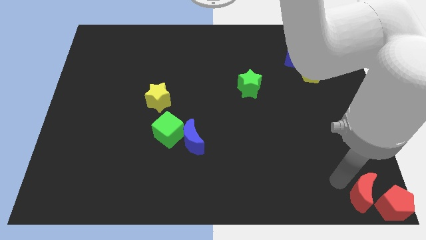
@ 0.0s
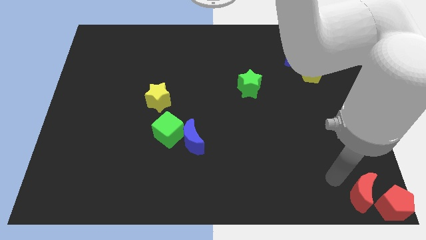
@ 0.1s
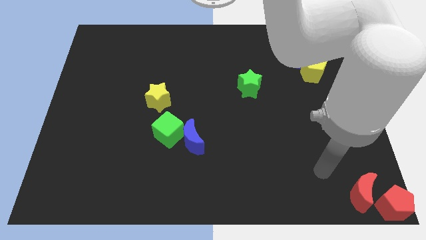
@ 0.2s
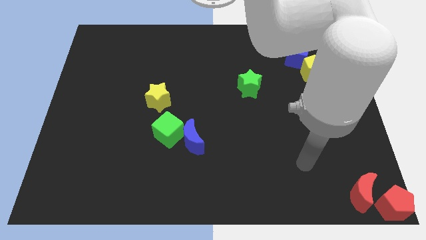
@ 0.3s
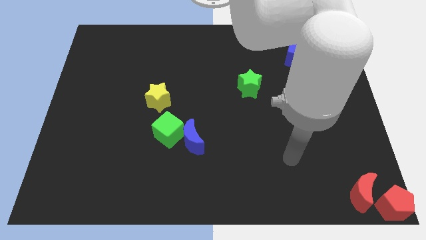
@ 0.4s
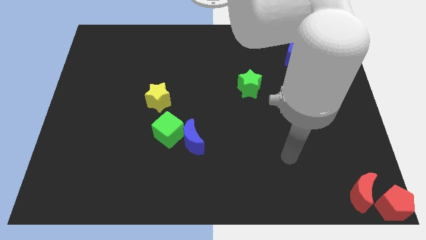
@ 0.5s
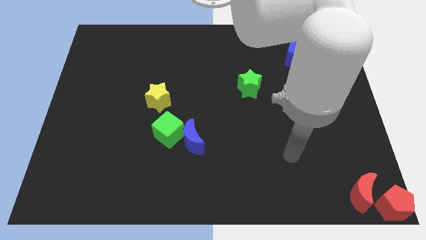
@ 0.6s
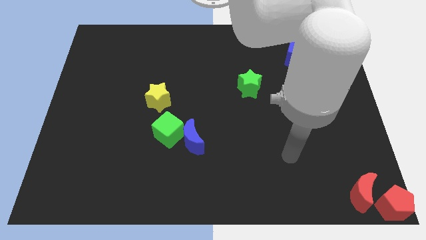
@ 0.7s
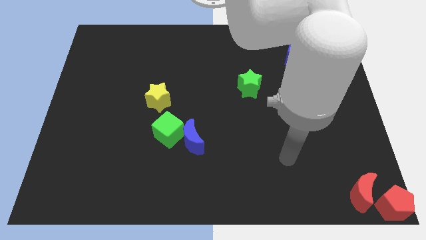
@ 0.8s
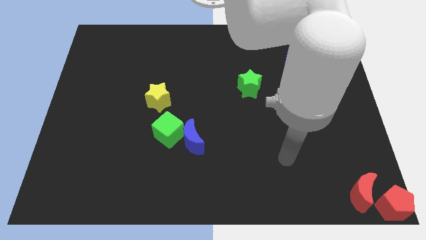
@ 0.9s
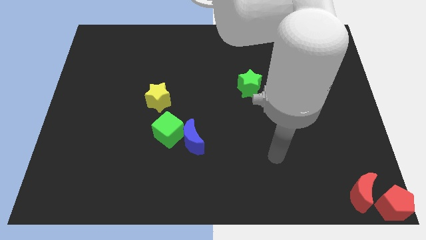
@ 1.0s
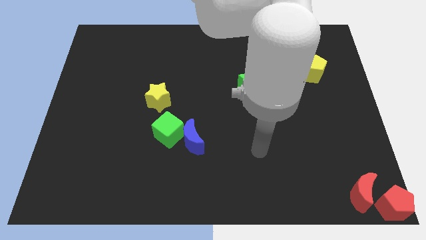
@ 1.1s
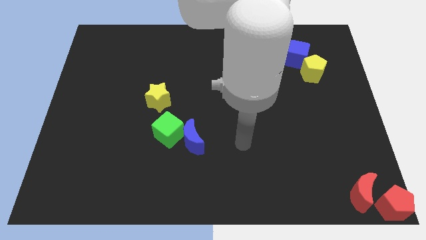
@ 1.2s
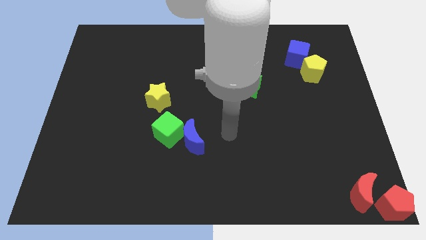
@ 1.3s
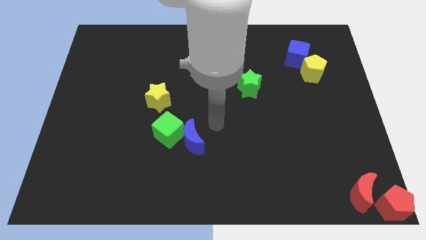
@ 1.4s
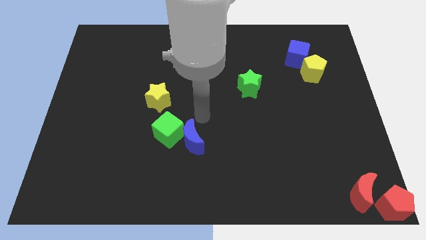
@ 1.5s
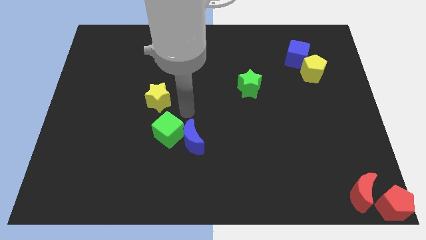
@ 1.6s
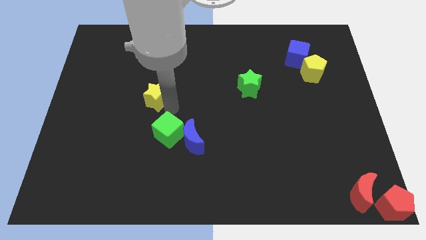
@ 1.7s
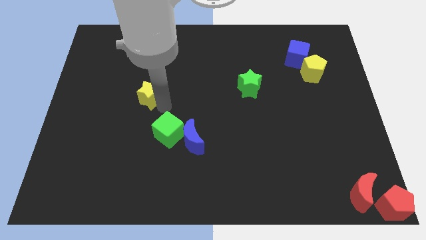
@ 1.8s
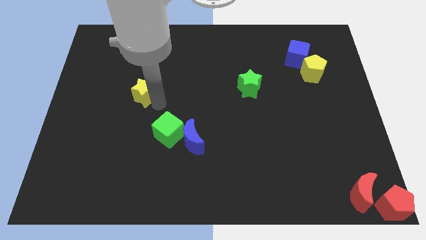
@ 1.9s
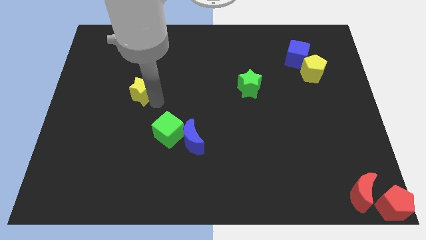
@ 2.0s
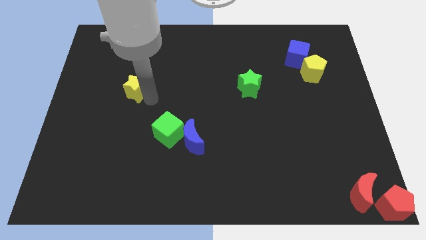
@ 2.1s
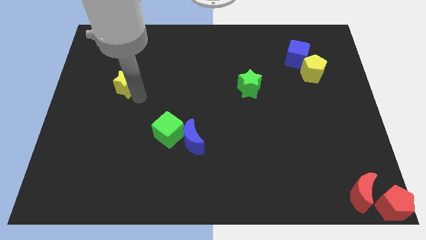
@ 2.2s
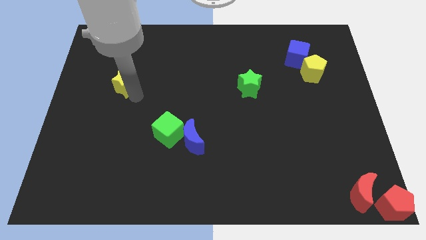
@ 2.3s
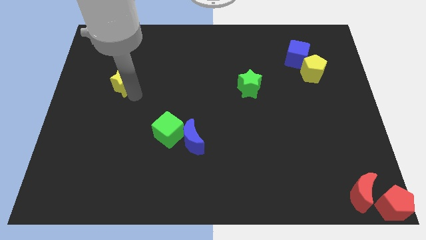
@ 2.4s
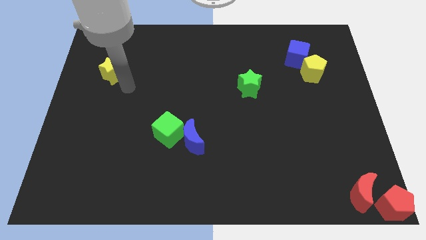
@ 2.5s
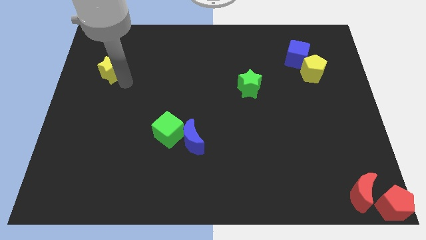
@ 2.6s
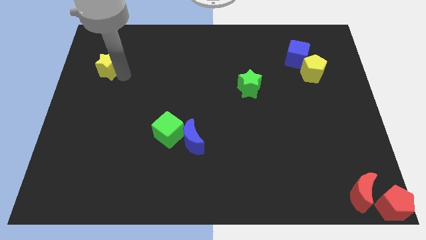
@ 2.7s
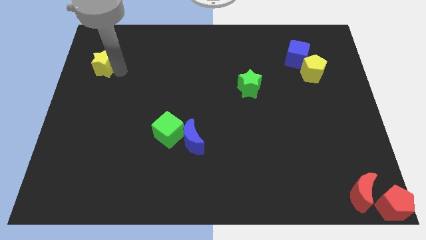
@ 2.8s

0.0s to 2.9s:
push the yellow star towards the left side of the board

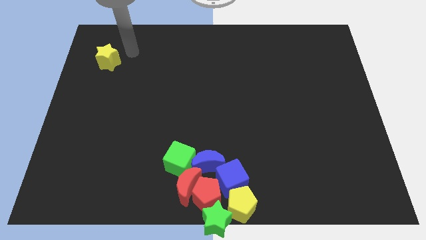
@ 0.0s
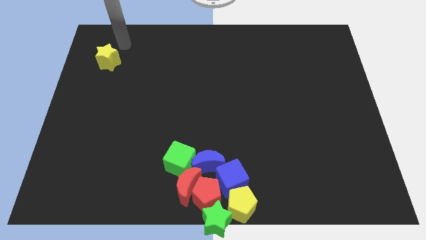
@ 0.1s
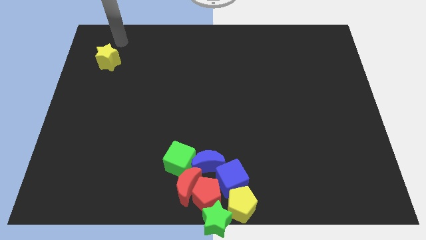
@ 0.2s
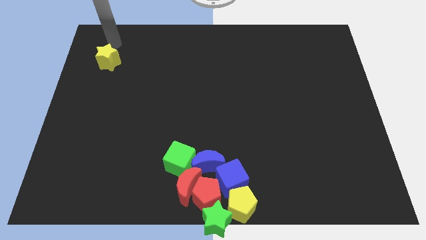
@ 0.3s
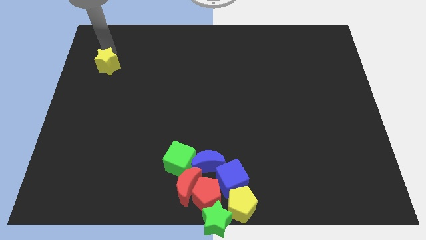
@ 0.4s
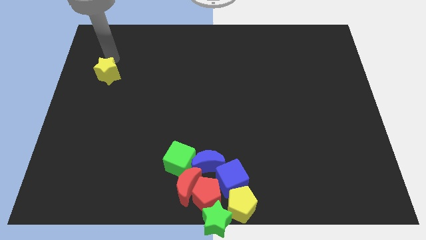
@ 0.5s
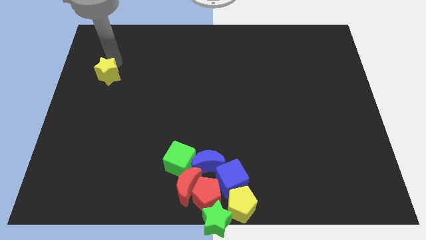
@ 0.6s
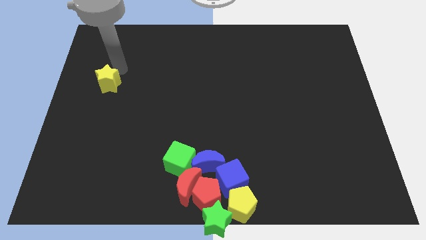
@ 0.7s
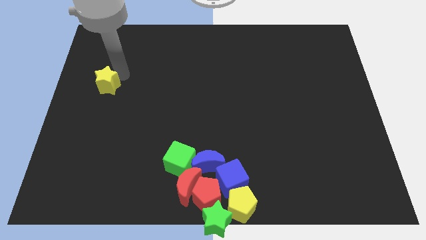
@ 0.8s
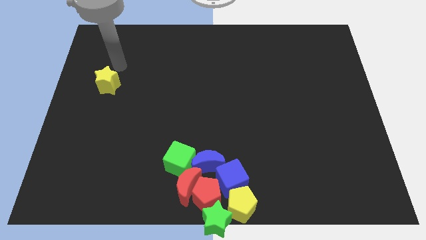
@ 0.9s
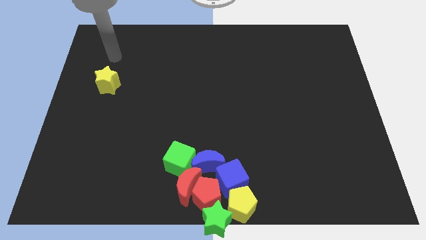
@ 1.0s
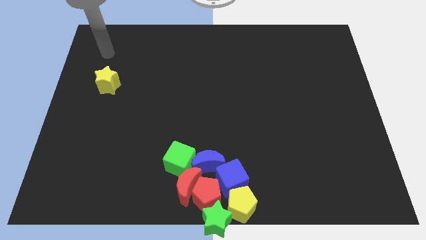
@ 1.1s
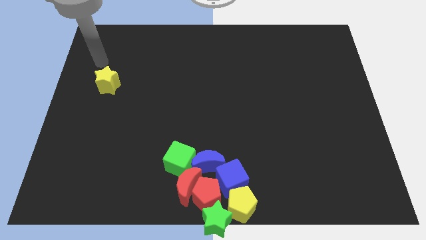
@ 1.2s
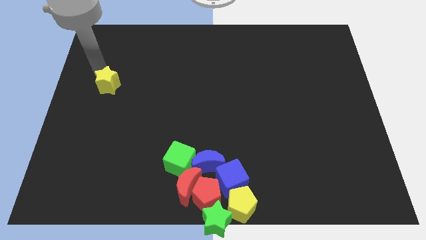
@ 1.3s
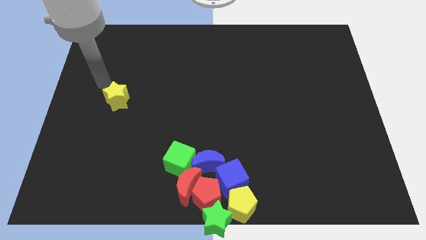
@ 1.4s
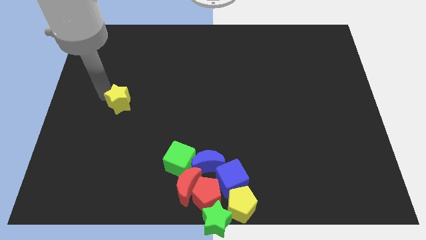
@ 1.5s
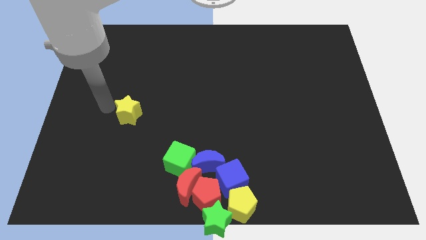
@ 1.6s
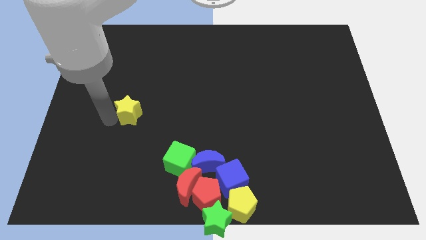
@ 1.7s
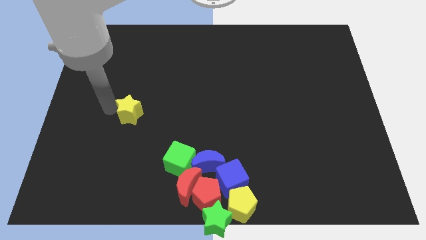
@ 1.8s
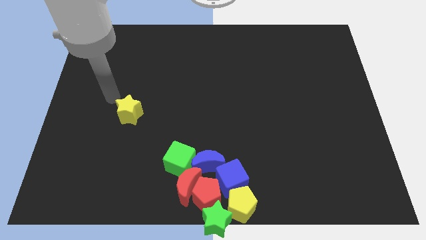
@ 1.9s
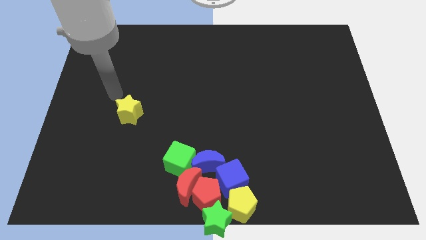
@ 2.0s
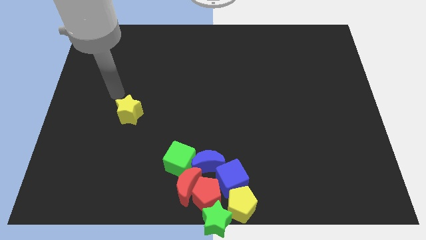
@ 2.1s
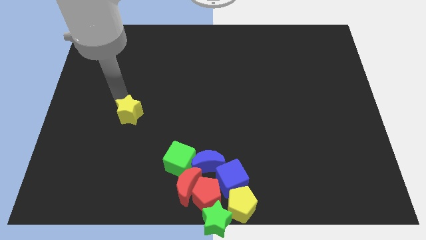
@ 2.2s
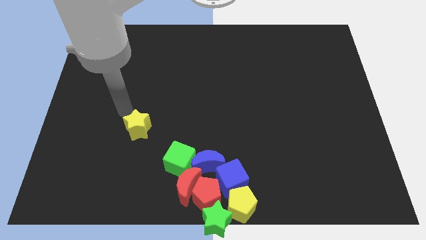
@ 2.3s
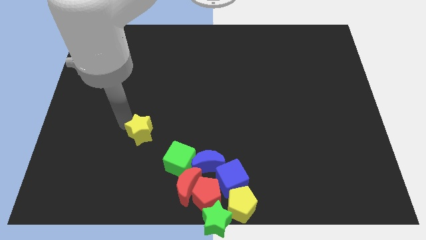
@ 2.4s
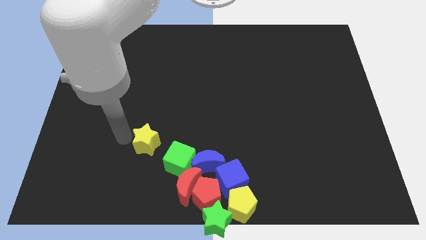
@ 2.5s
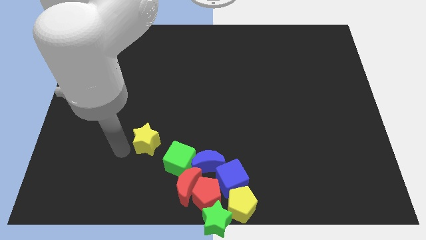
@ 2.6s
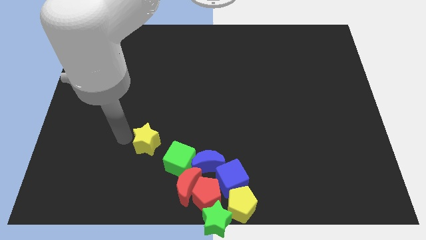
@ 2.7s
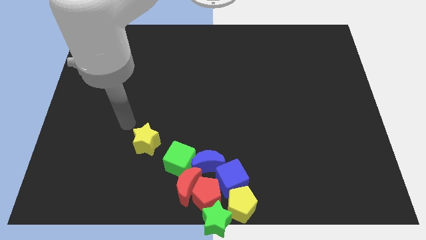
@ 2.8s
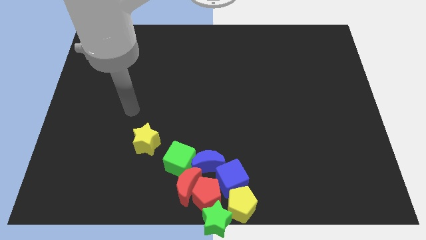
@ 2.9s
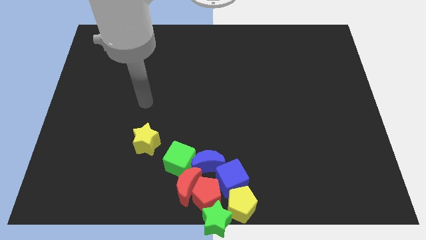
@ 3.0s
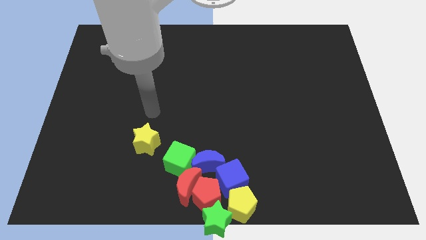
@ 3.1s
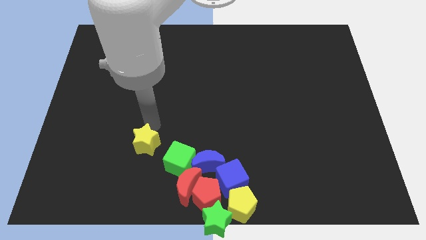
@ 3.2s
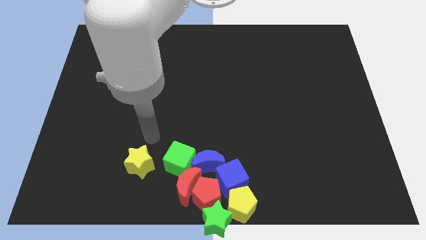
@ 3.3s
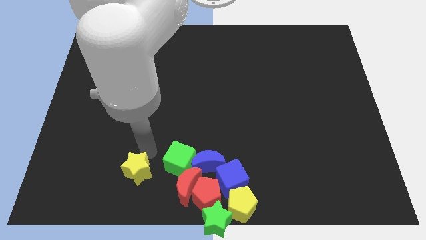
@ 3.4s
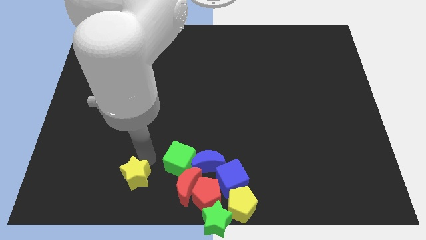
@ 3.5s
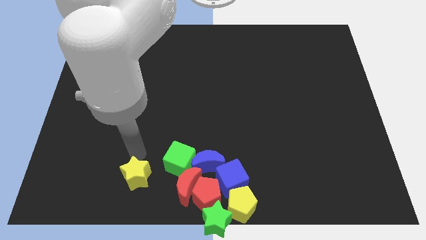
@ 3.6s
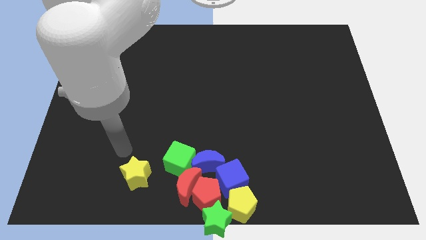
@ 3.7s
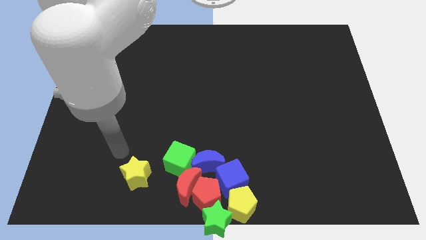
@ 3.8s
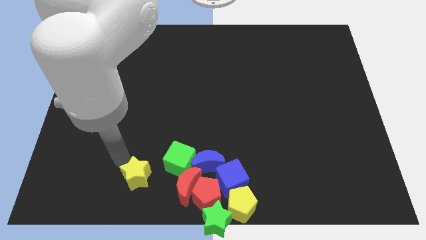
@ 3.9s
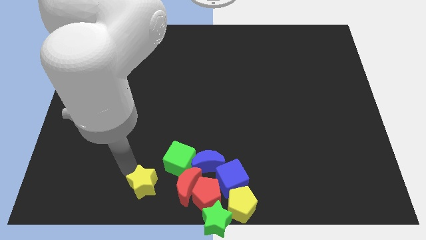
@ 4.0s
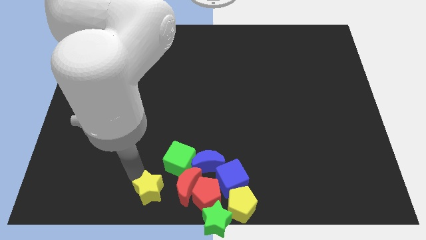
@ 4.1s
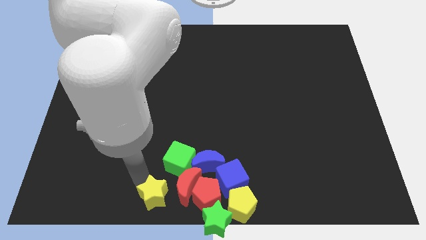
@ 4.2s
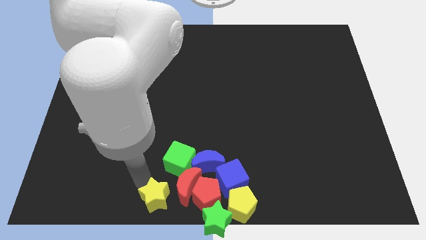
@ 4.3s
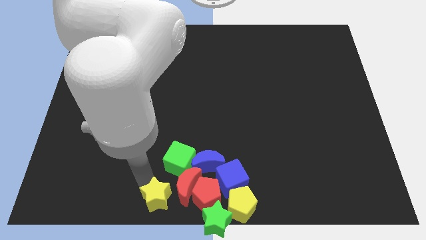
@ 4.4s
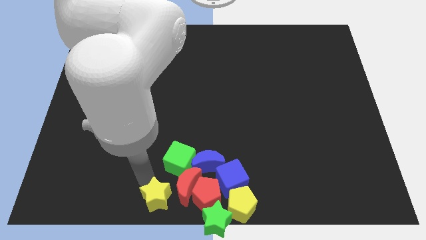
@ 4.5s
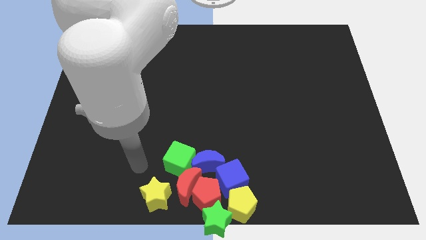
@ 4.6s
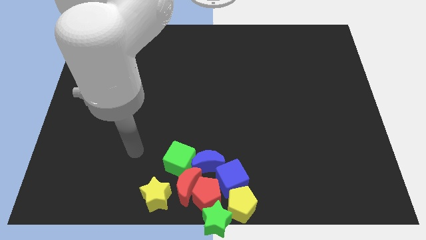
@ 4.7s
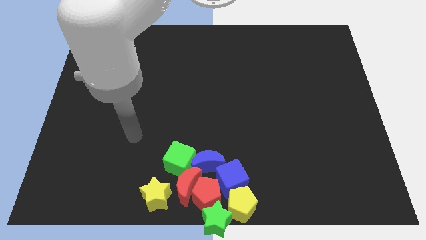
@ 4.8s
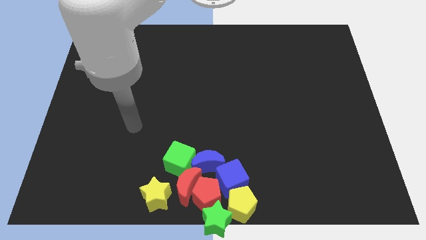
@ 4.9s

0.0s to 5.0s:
move the yellow star to the left of the red moon

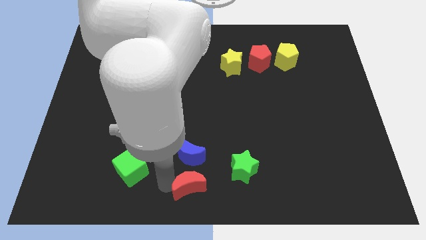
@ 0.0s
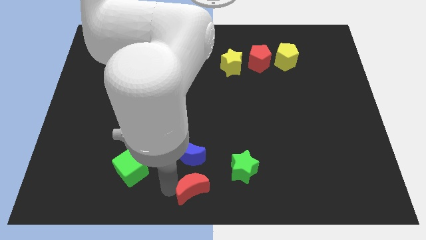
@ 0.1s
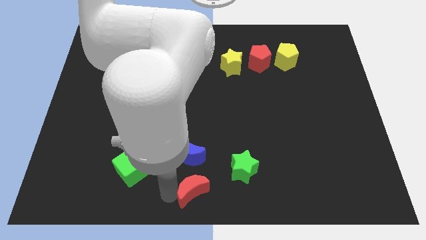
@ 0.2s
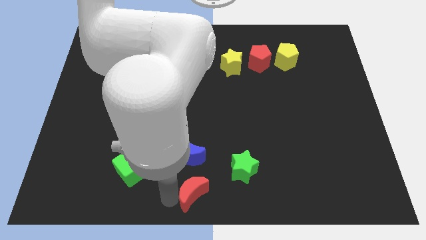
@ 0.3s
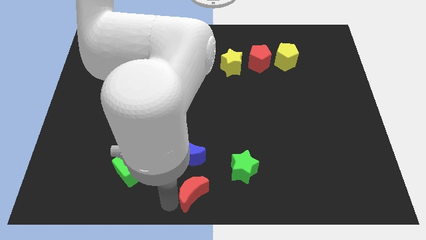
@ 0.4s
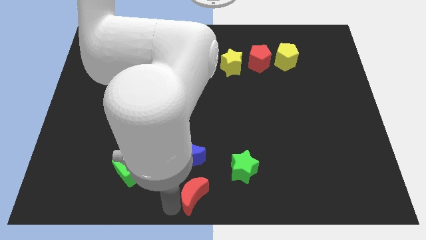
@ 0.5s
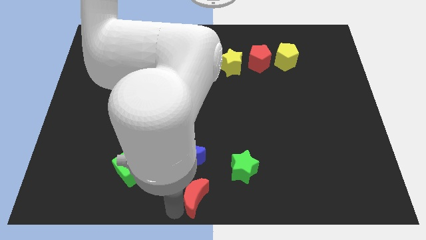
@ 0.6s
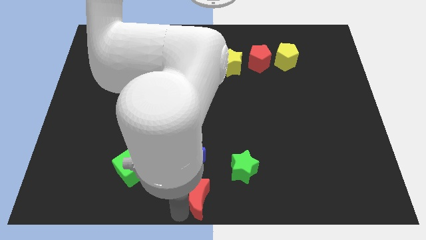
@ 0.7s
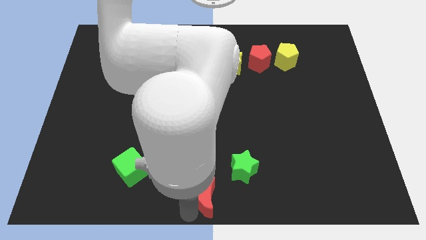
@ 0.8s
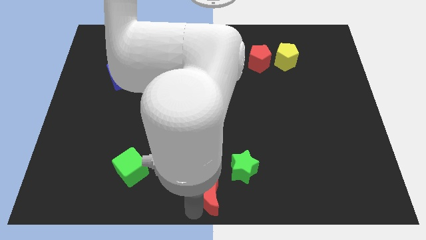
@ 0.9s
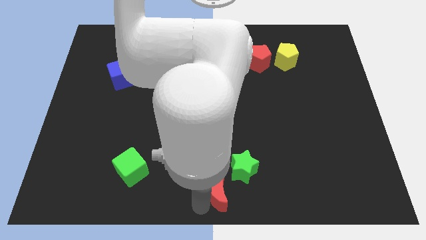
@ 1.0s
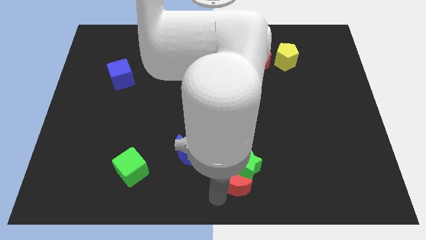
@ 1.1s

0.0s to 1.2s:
push red crescent below green star
